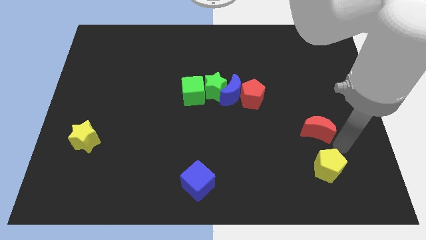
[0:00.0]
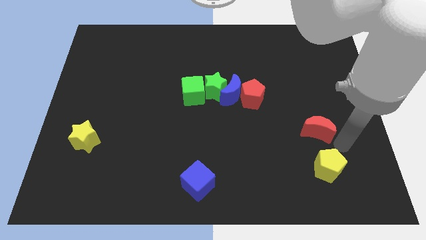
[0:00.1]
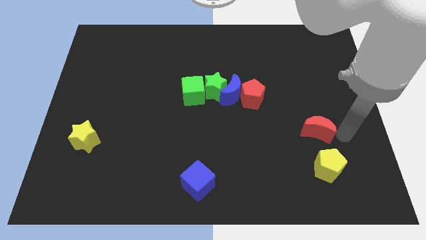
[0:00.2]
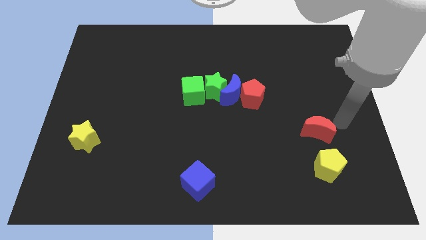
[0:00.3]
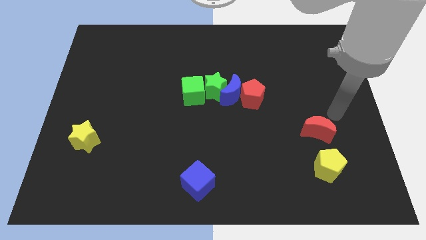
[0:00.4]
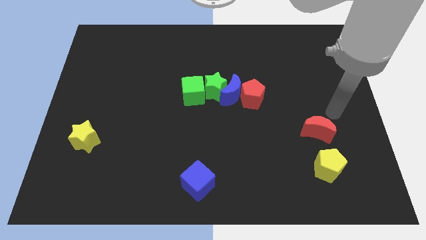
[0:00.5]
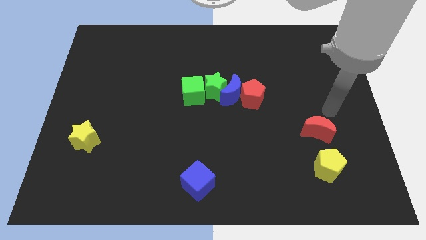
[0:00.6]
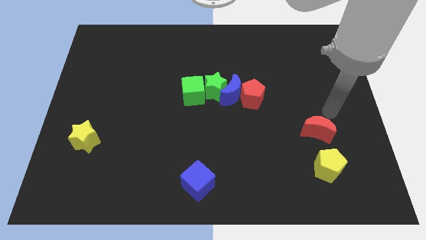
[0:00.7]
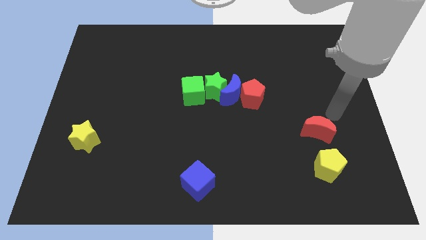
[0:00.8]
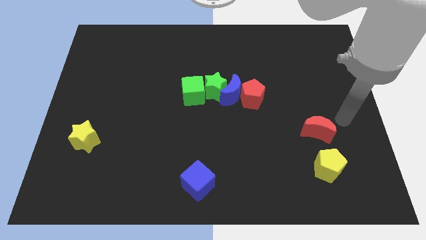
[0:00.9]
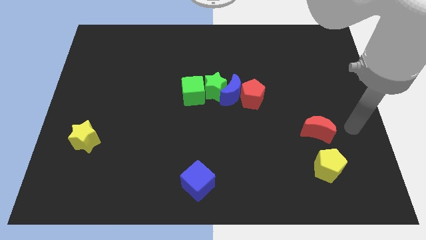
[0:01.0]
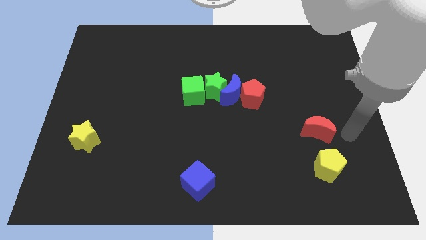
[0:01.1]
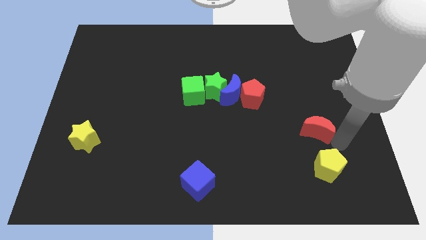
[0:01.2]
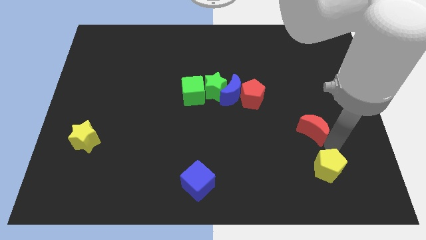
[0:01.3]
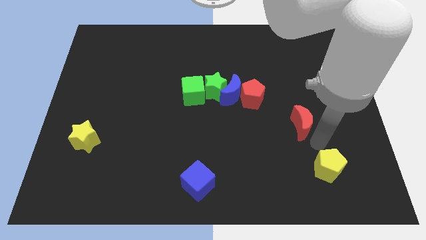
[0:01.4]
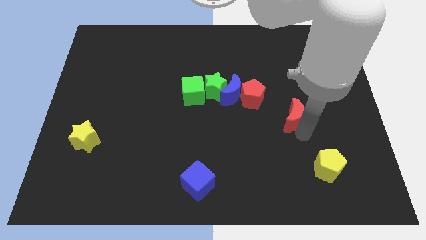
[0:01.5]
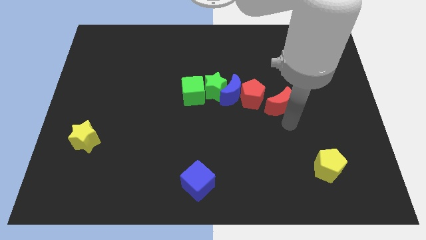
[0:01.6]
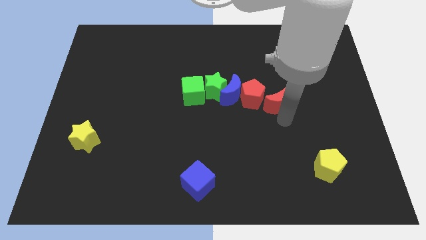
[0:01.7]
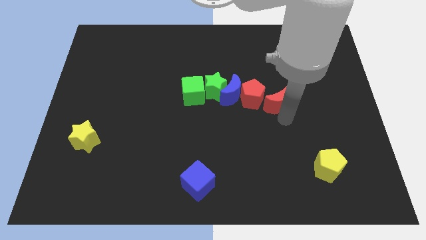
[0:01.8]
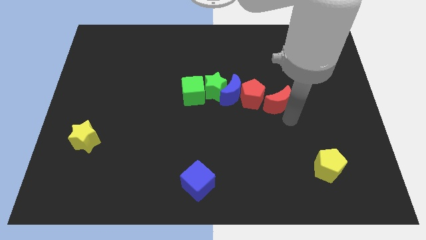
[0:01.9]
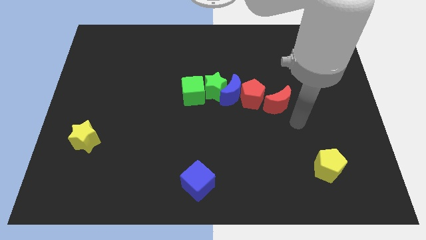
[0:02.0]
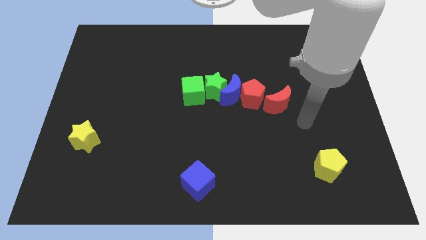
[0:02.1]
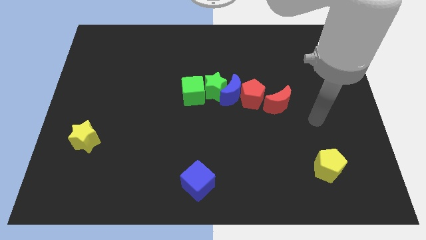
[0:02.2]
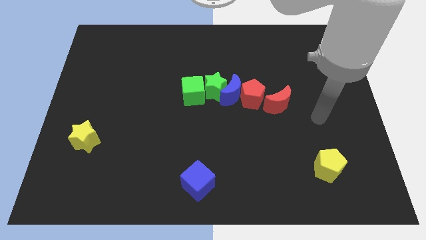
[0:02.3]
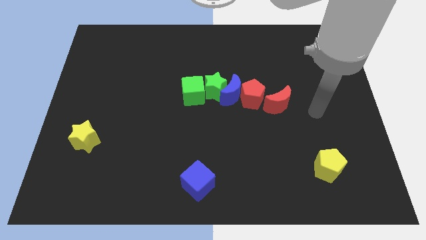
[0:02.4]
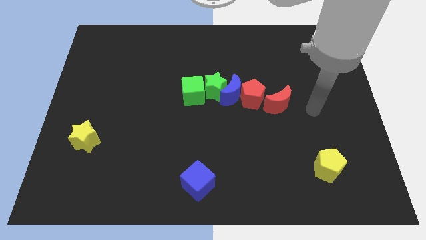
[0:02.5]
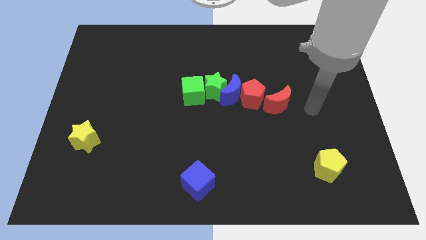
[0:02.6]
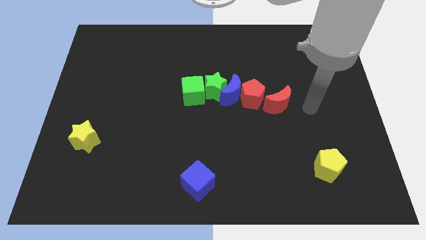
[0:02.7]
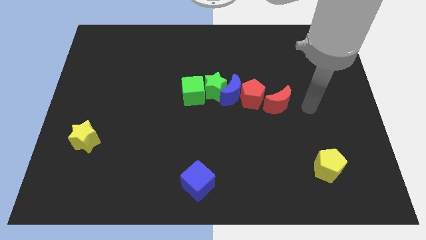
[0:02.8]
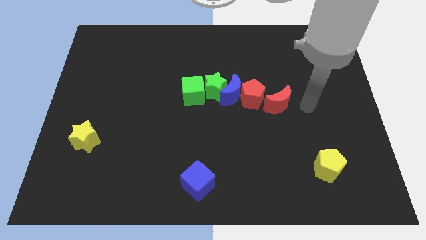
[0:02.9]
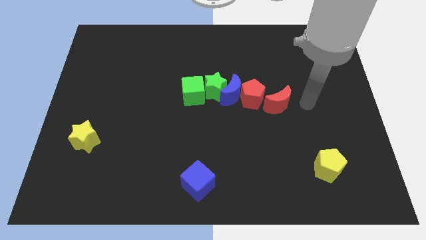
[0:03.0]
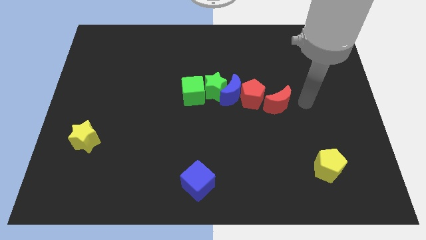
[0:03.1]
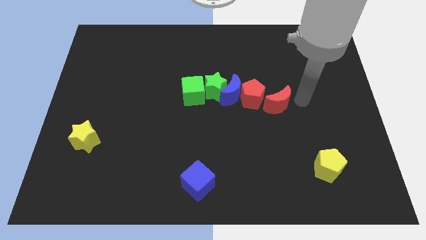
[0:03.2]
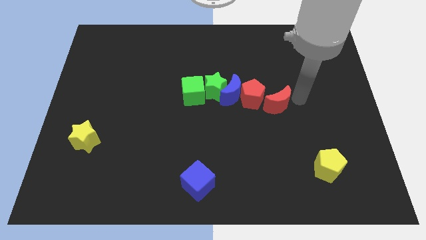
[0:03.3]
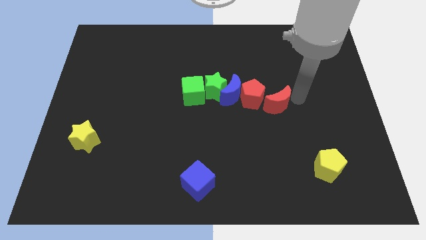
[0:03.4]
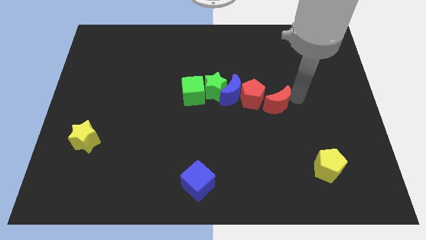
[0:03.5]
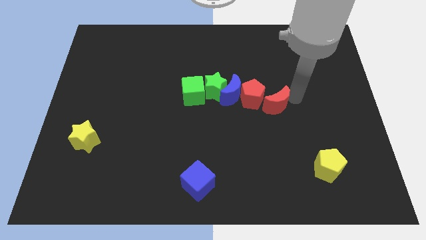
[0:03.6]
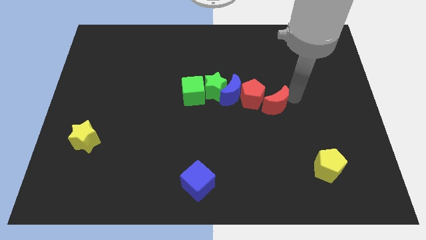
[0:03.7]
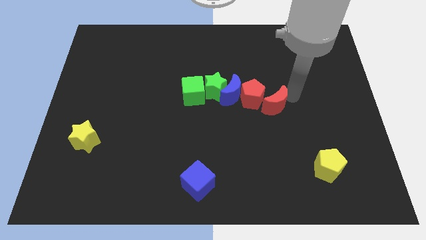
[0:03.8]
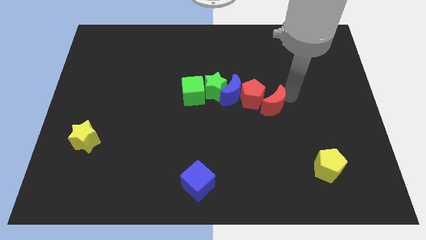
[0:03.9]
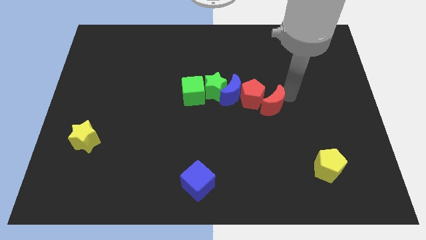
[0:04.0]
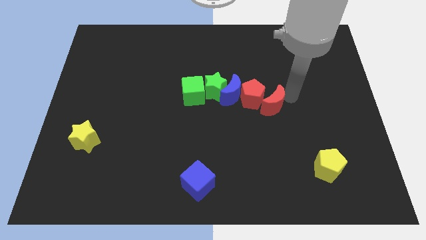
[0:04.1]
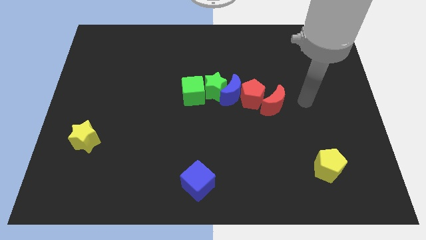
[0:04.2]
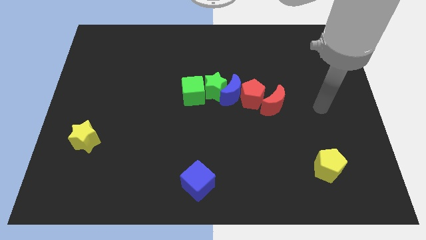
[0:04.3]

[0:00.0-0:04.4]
place the red moon beside the red pentagon

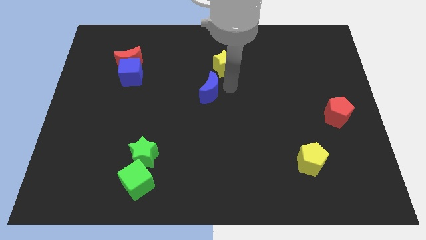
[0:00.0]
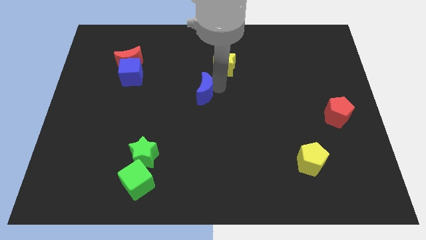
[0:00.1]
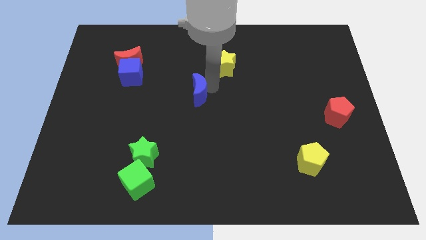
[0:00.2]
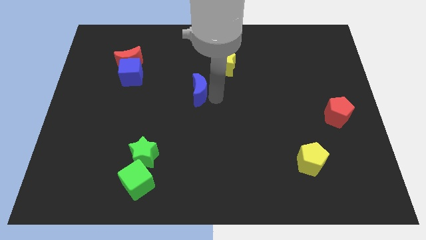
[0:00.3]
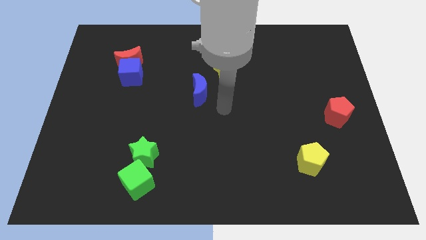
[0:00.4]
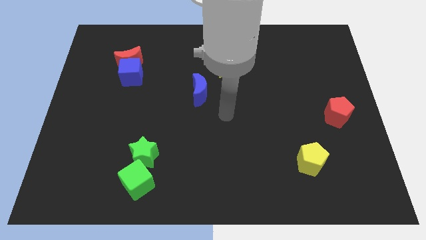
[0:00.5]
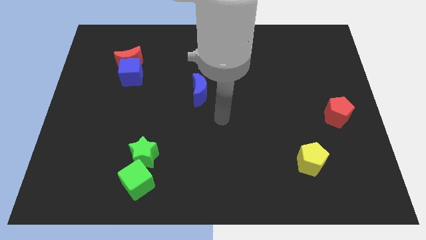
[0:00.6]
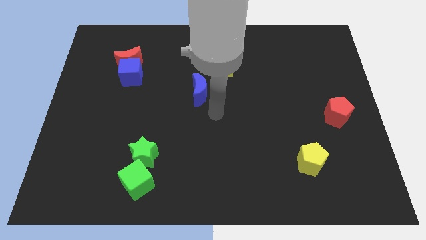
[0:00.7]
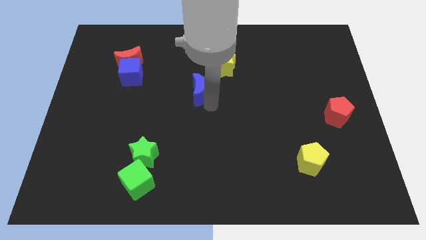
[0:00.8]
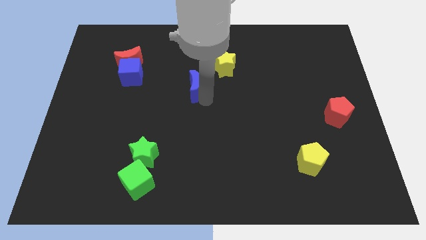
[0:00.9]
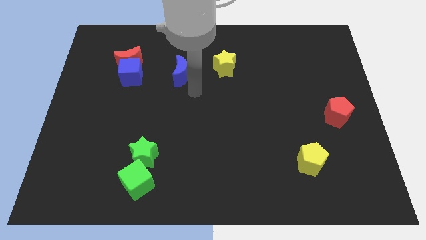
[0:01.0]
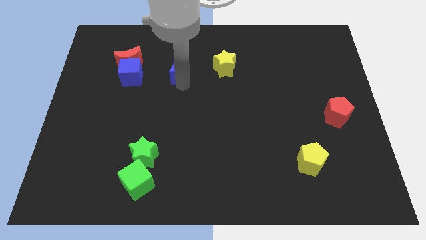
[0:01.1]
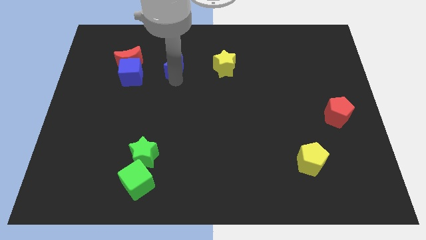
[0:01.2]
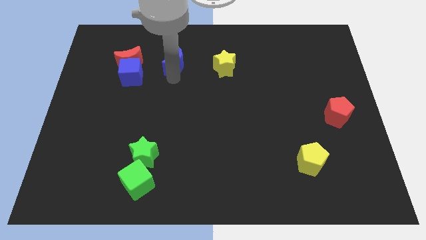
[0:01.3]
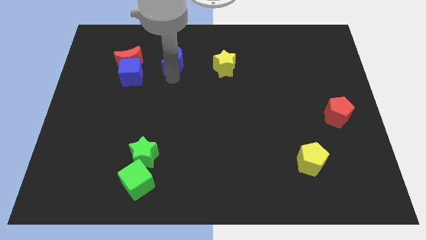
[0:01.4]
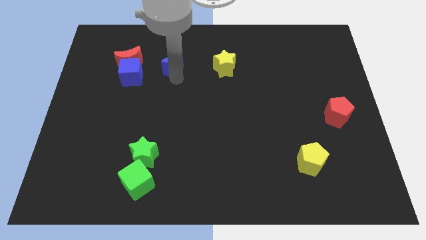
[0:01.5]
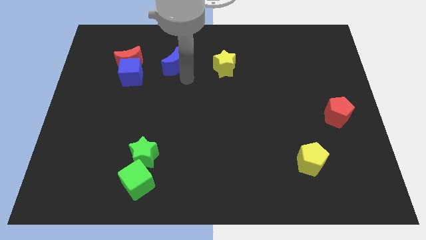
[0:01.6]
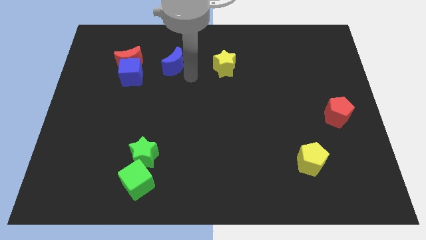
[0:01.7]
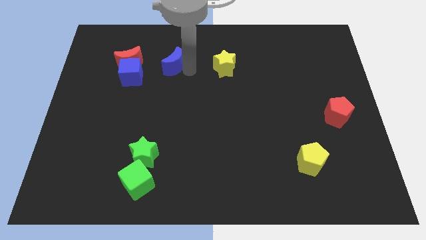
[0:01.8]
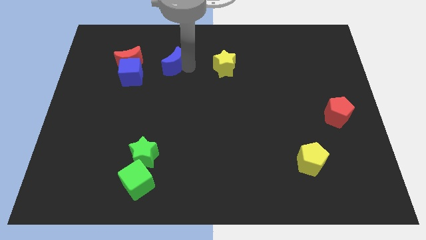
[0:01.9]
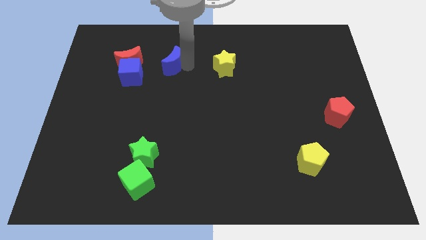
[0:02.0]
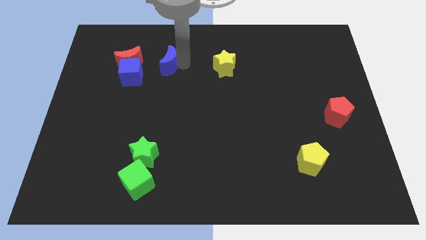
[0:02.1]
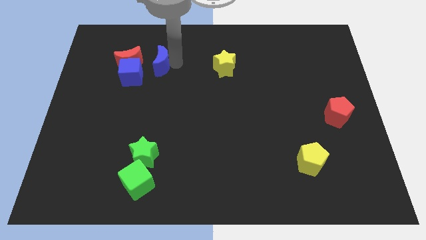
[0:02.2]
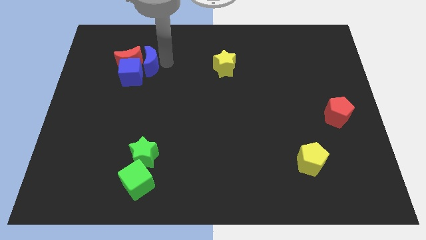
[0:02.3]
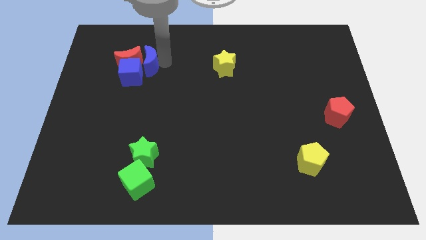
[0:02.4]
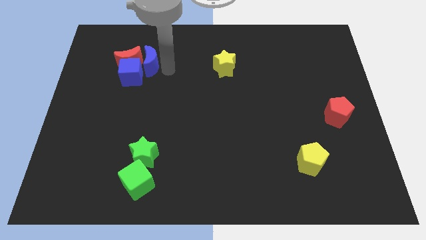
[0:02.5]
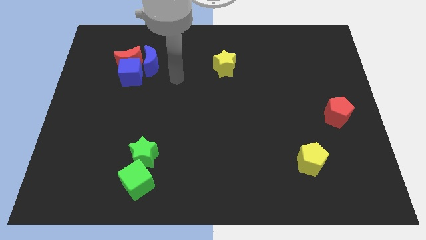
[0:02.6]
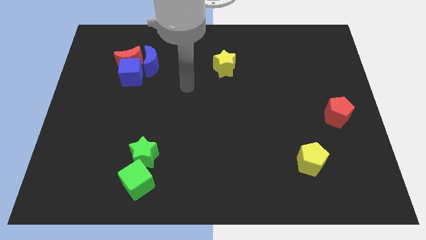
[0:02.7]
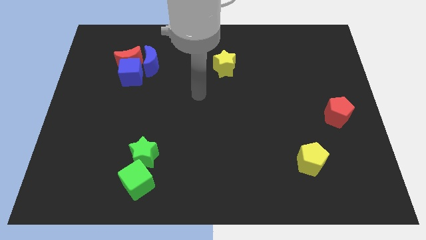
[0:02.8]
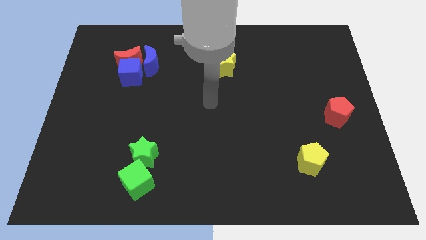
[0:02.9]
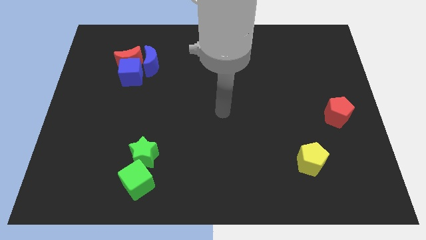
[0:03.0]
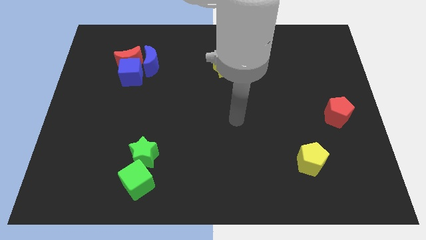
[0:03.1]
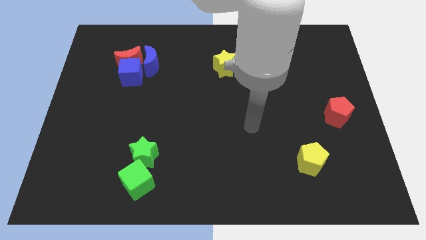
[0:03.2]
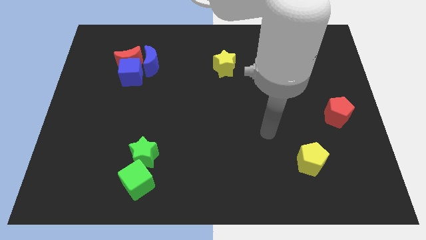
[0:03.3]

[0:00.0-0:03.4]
push the blue moon closer to the red moon

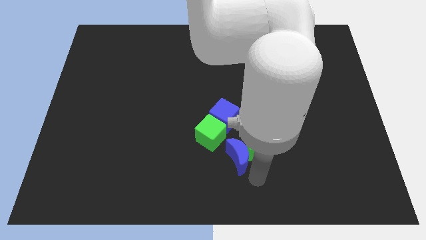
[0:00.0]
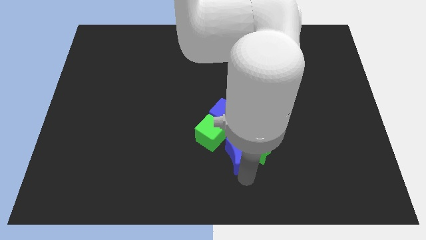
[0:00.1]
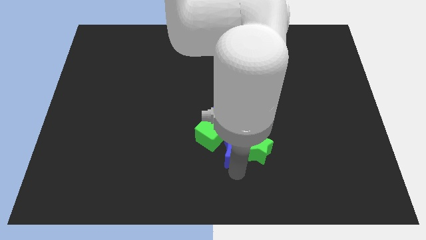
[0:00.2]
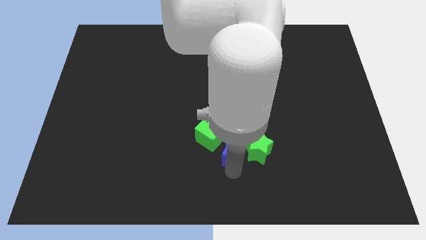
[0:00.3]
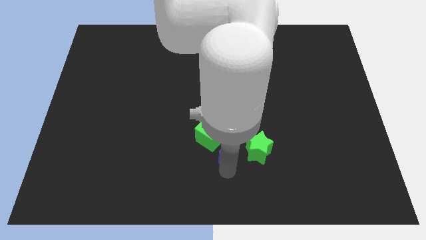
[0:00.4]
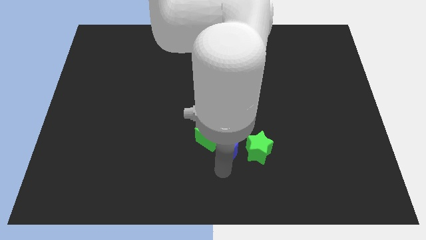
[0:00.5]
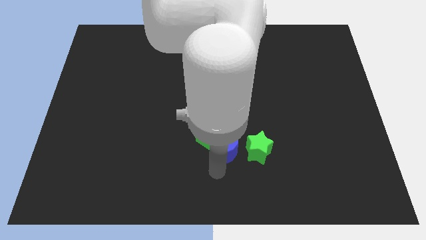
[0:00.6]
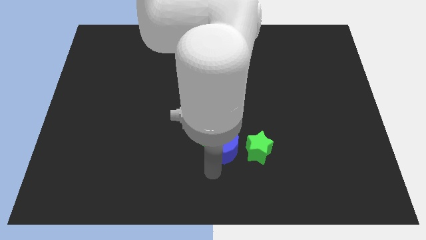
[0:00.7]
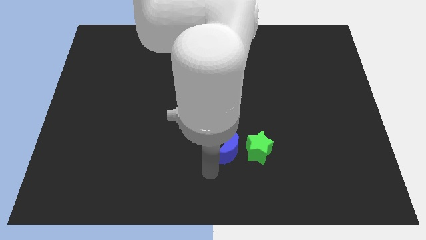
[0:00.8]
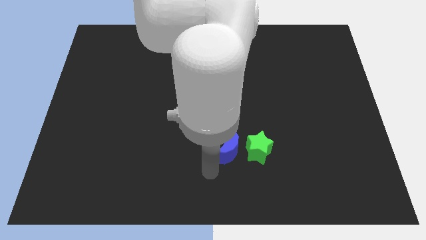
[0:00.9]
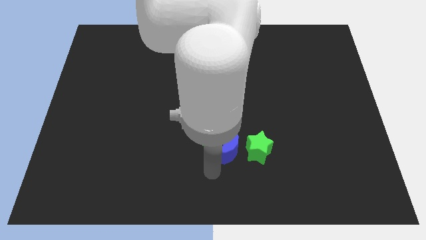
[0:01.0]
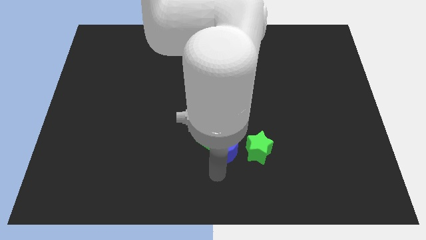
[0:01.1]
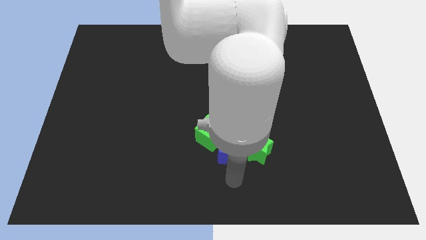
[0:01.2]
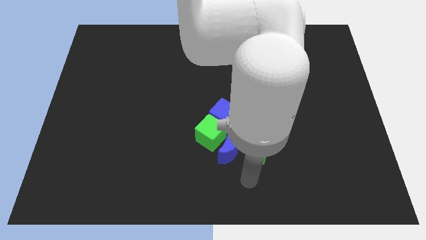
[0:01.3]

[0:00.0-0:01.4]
separate the blue moon from green star
